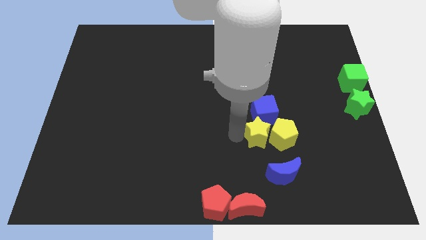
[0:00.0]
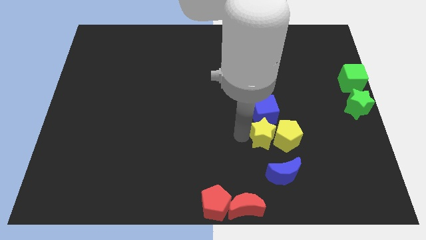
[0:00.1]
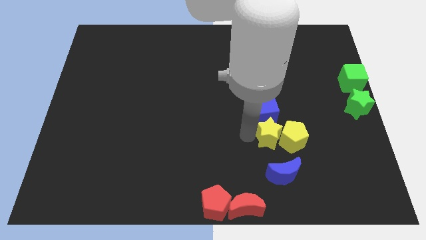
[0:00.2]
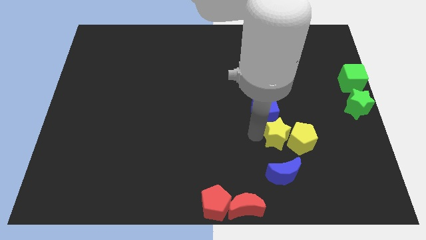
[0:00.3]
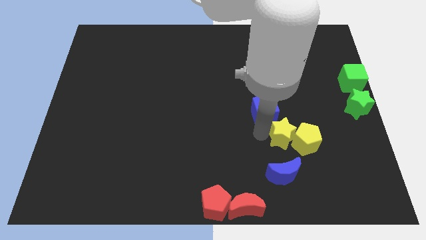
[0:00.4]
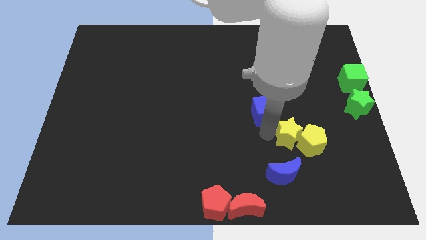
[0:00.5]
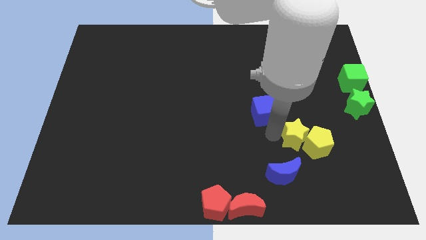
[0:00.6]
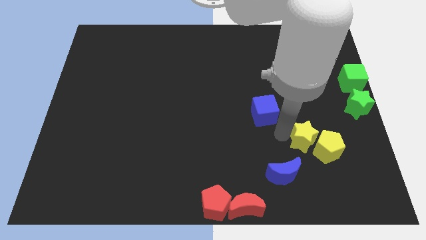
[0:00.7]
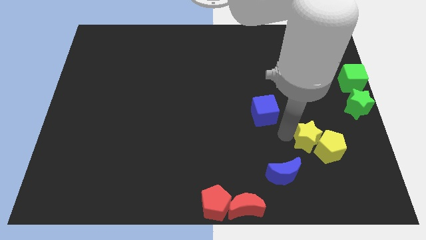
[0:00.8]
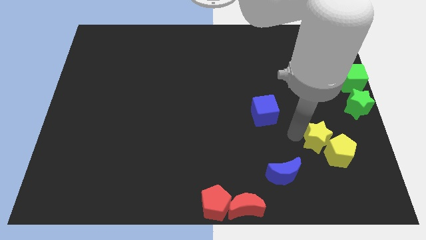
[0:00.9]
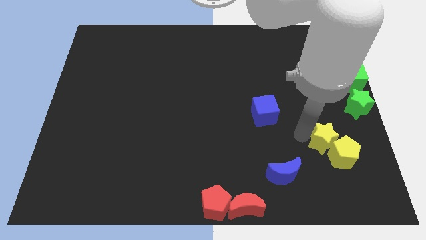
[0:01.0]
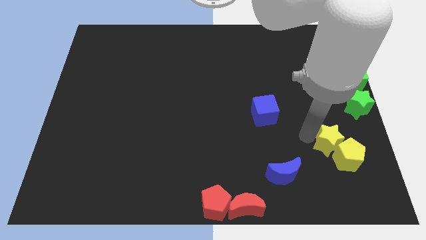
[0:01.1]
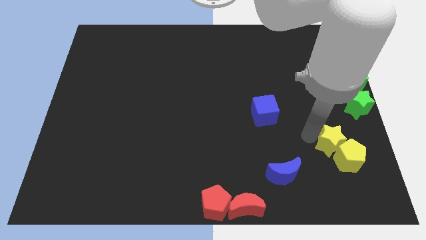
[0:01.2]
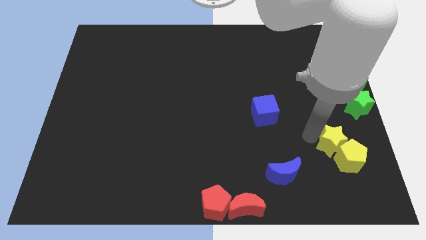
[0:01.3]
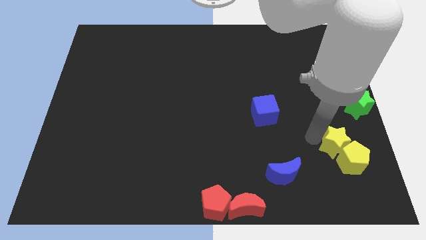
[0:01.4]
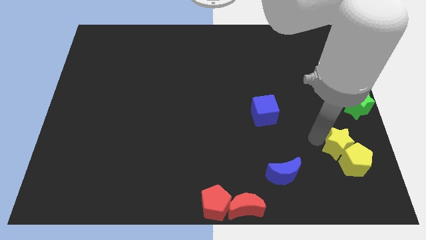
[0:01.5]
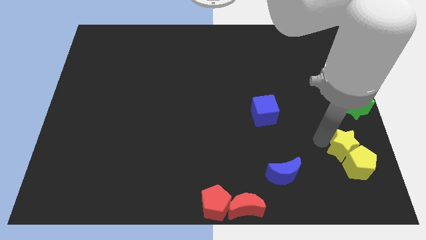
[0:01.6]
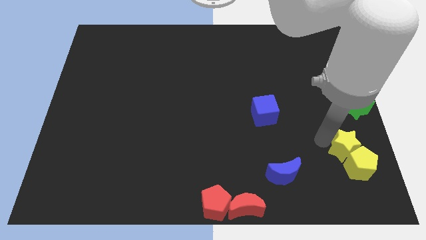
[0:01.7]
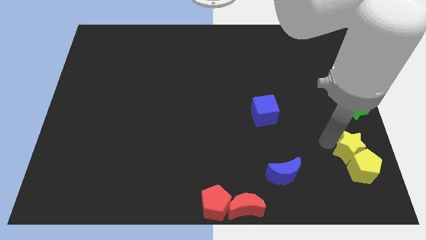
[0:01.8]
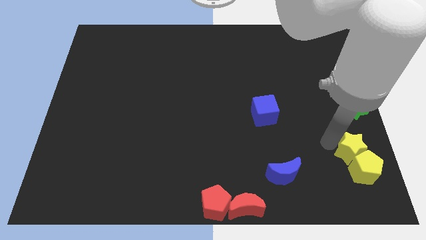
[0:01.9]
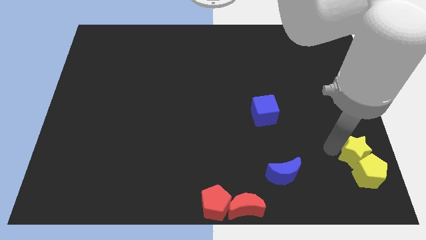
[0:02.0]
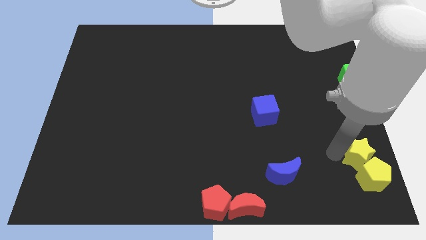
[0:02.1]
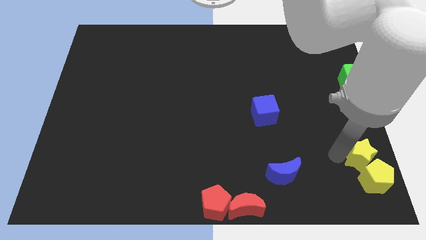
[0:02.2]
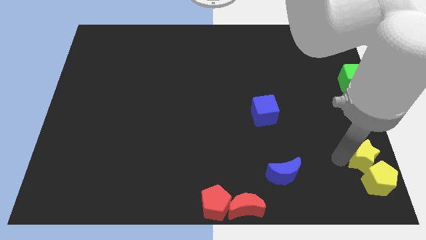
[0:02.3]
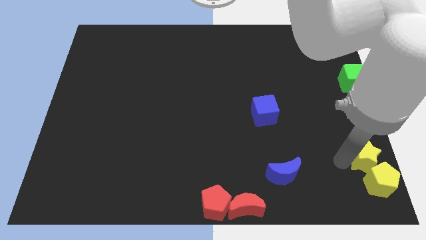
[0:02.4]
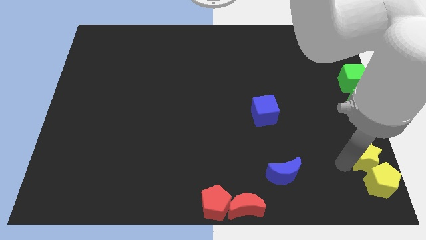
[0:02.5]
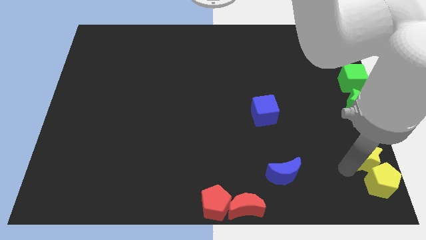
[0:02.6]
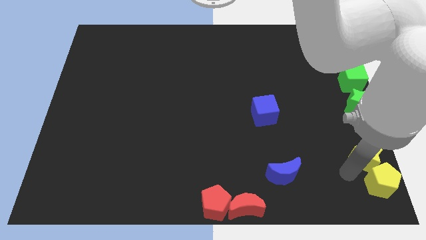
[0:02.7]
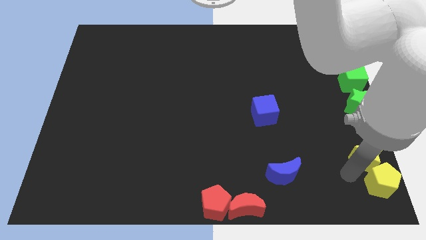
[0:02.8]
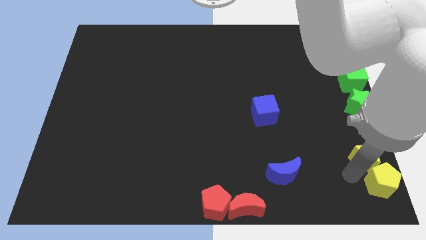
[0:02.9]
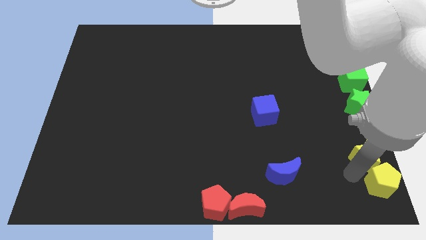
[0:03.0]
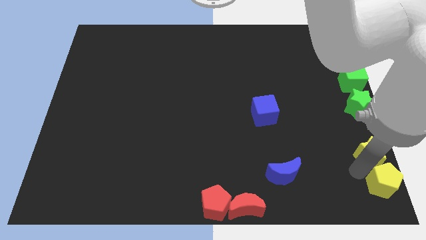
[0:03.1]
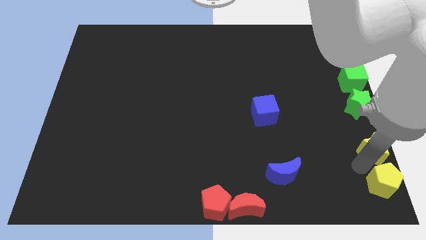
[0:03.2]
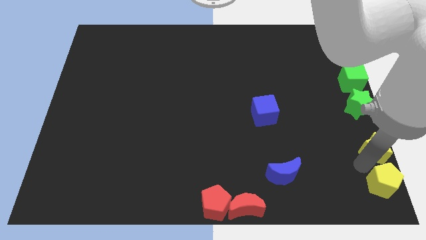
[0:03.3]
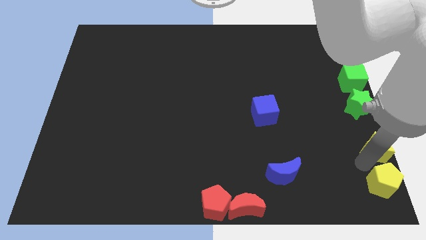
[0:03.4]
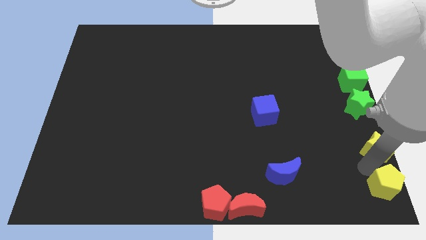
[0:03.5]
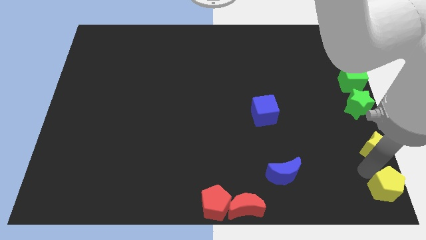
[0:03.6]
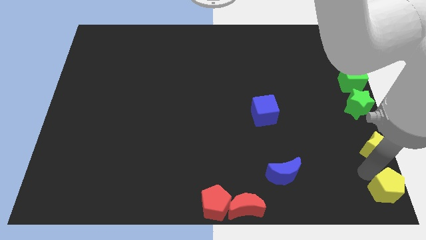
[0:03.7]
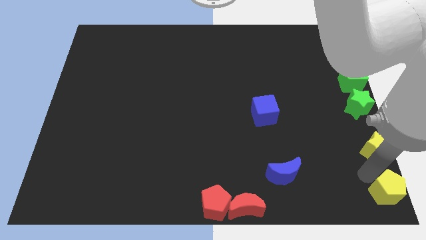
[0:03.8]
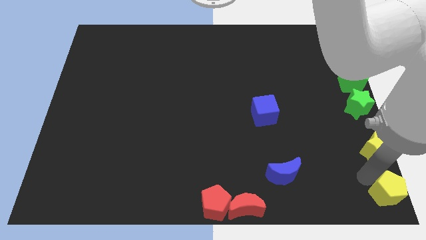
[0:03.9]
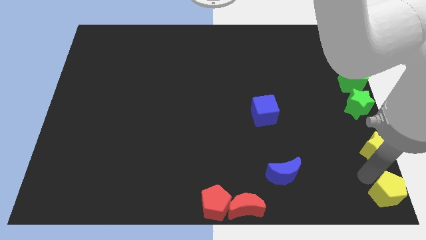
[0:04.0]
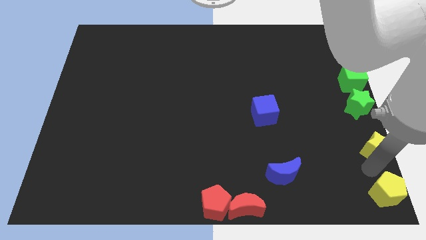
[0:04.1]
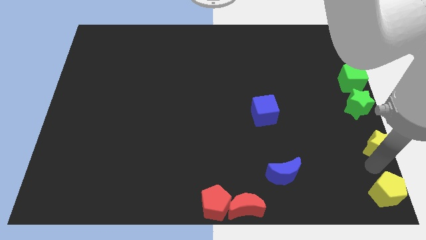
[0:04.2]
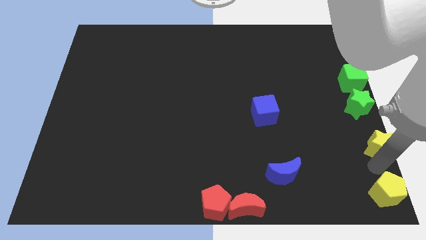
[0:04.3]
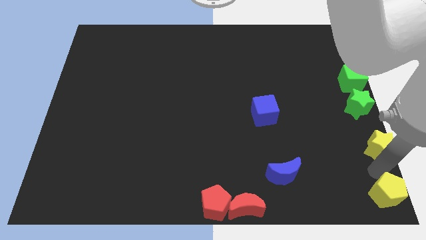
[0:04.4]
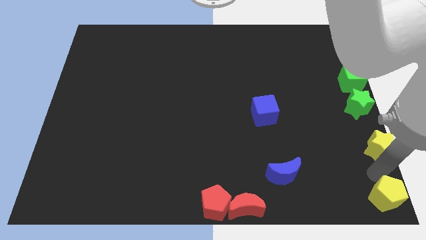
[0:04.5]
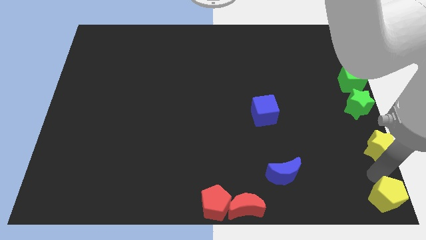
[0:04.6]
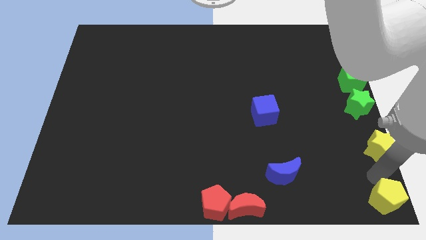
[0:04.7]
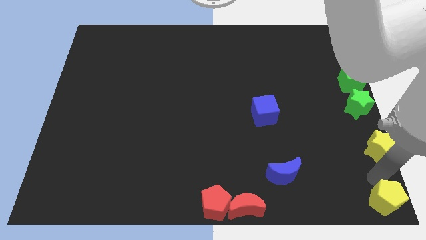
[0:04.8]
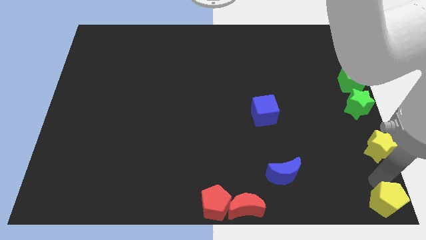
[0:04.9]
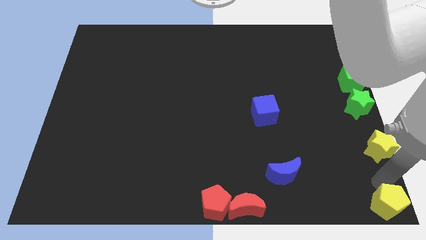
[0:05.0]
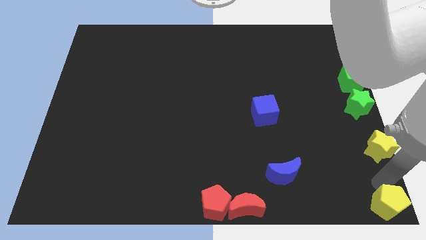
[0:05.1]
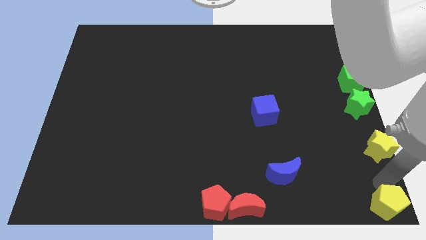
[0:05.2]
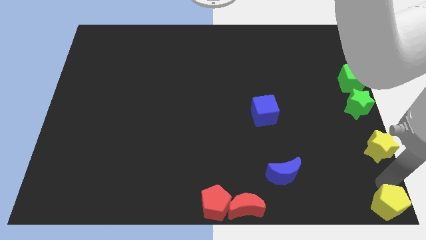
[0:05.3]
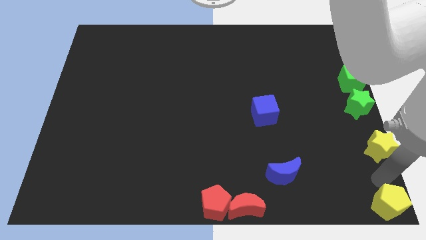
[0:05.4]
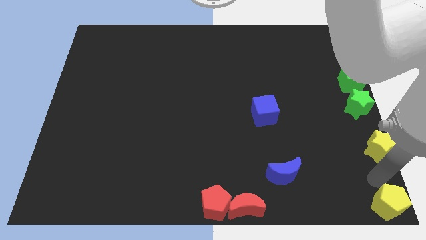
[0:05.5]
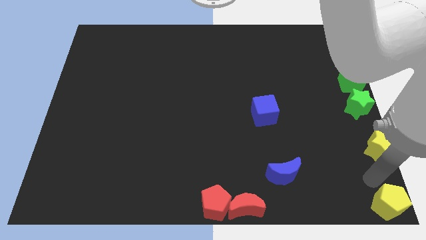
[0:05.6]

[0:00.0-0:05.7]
place the yellow pentagon below the yellow star

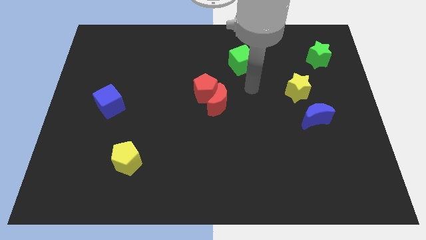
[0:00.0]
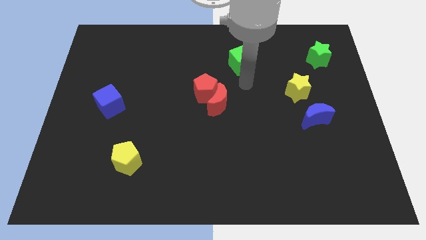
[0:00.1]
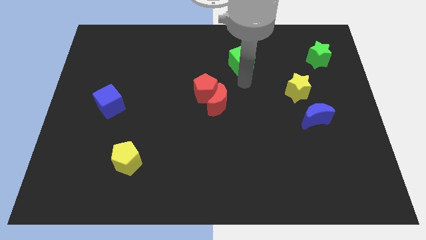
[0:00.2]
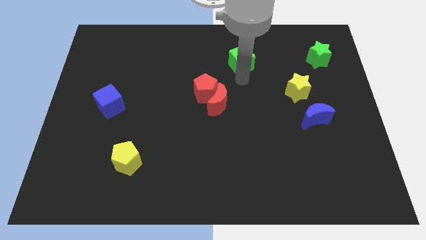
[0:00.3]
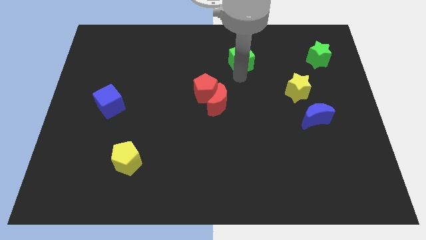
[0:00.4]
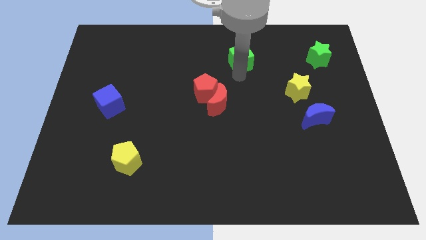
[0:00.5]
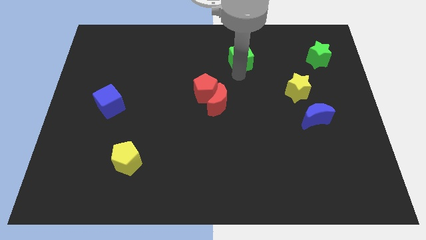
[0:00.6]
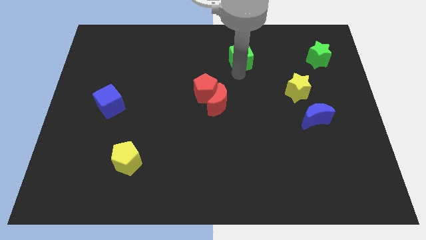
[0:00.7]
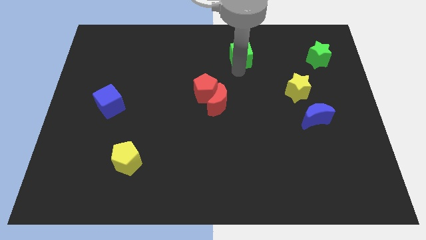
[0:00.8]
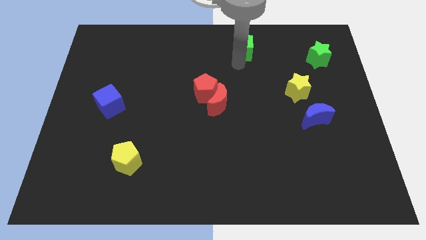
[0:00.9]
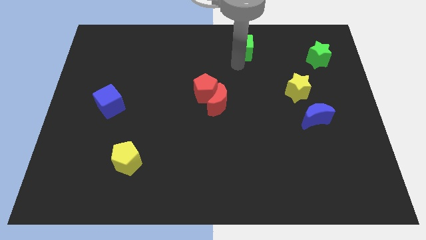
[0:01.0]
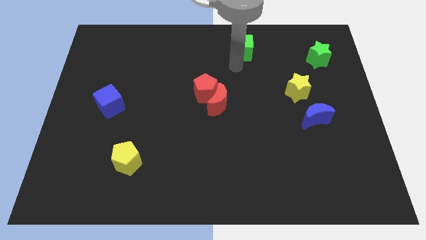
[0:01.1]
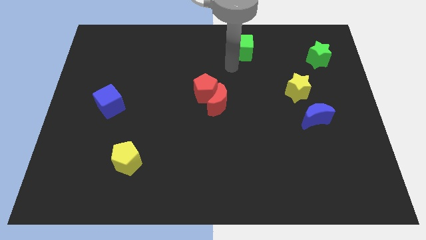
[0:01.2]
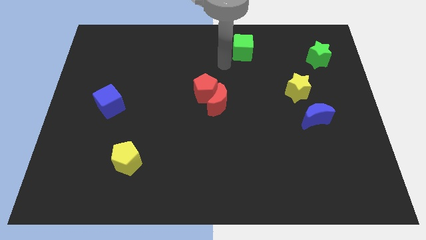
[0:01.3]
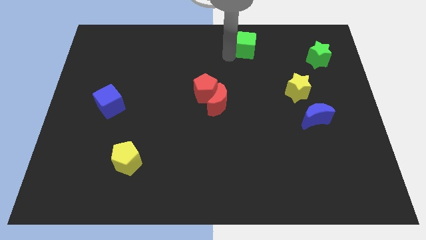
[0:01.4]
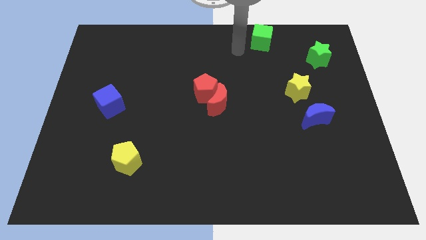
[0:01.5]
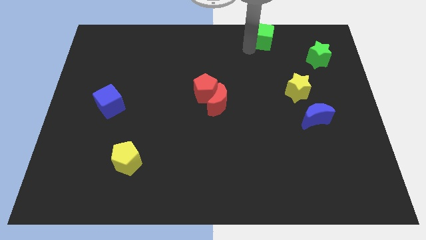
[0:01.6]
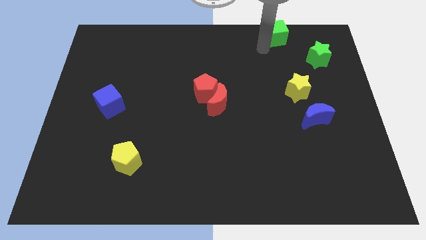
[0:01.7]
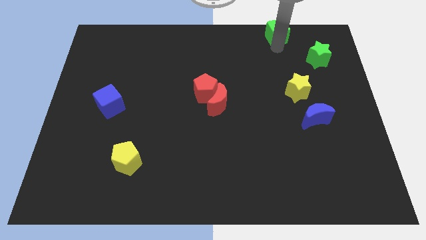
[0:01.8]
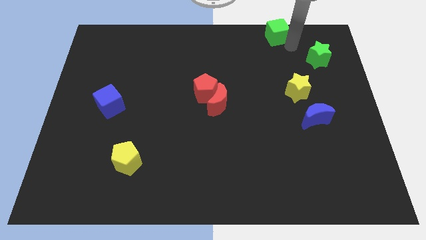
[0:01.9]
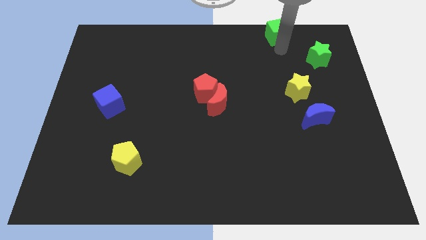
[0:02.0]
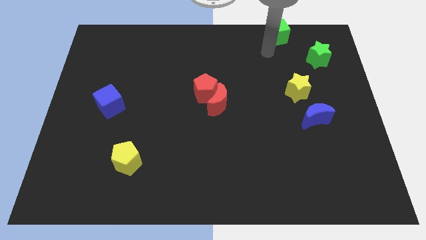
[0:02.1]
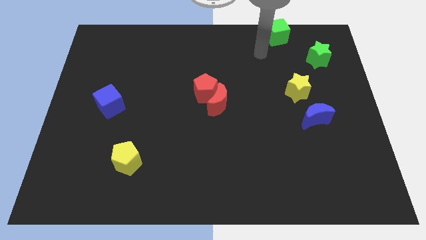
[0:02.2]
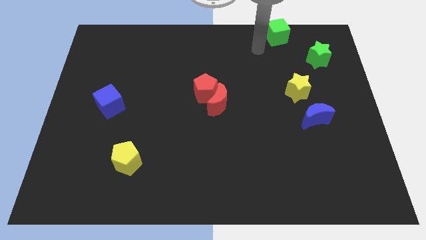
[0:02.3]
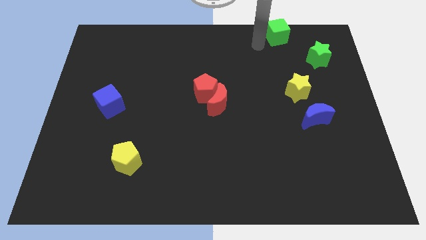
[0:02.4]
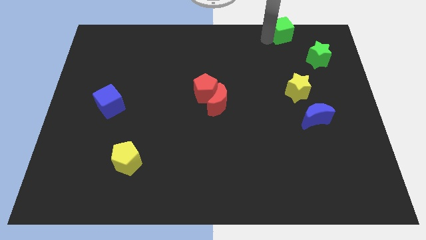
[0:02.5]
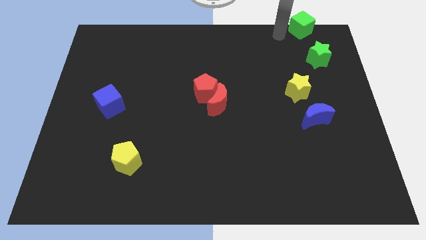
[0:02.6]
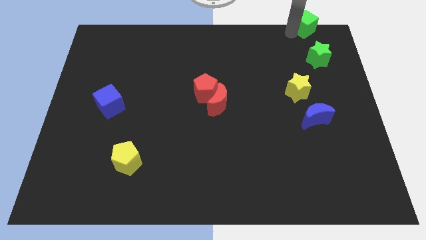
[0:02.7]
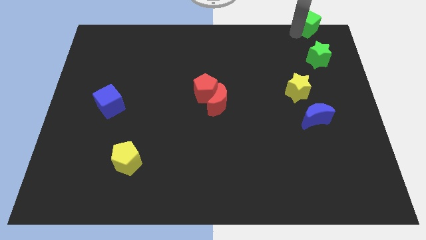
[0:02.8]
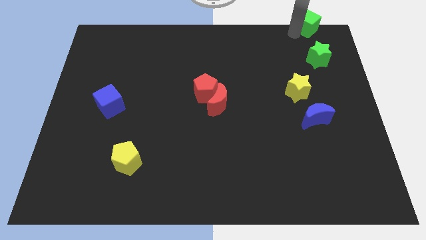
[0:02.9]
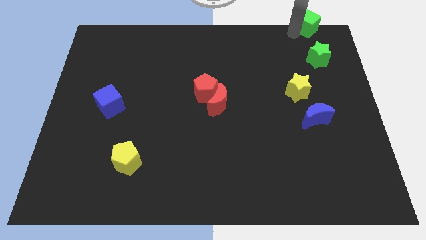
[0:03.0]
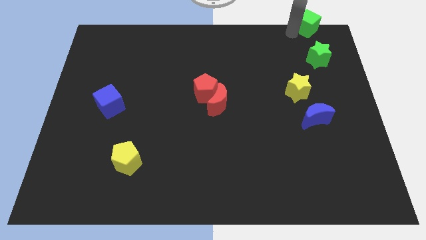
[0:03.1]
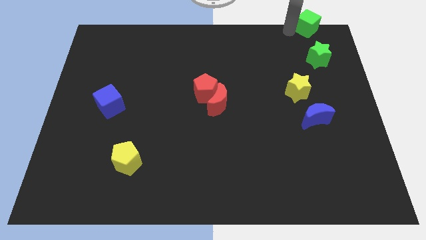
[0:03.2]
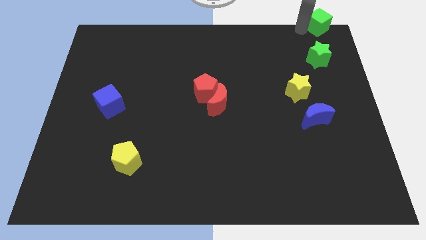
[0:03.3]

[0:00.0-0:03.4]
place green cube to the top of green star
